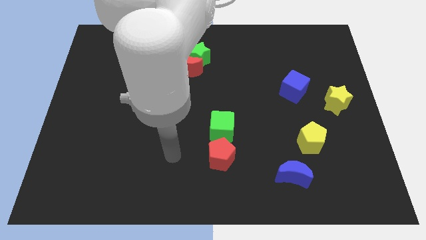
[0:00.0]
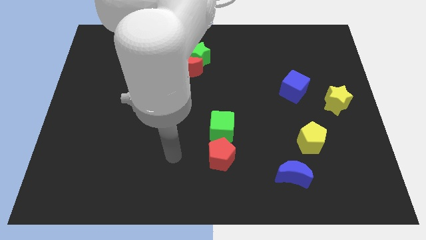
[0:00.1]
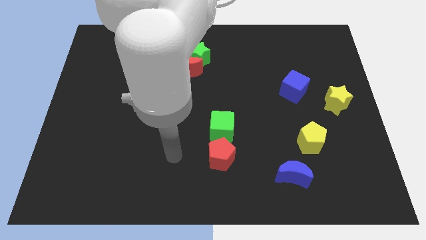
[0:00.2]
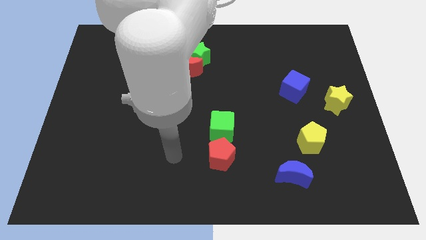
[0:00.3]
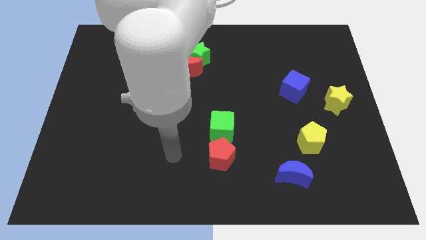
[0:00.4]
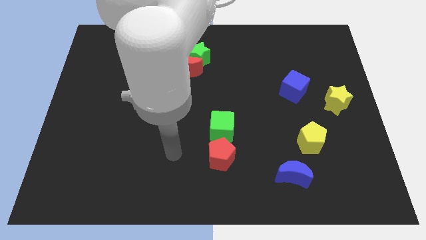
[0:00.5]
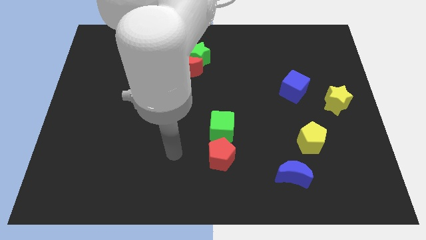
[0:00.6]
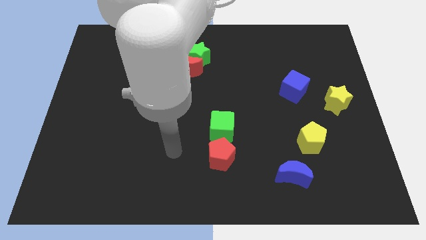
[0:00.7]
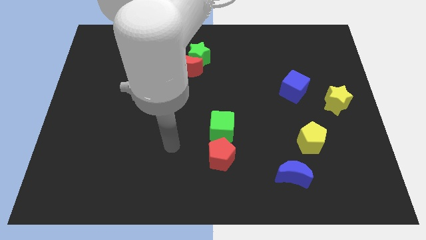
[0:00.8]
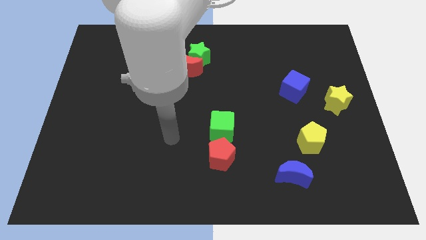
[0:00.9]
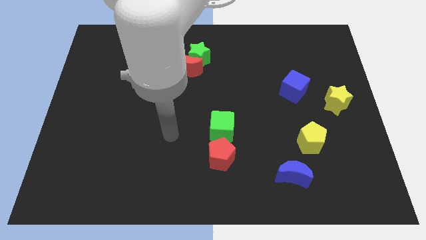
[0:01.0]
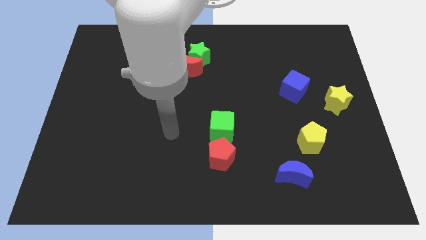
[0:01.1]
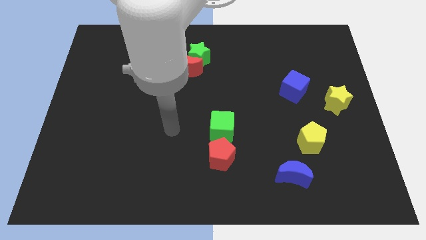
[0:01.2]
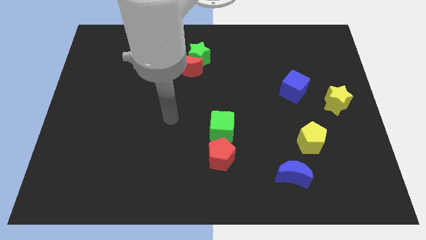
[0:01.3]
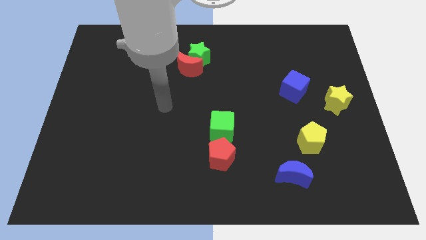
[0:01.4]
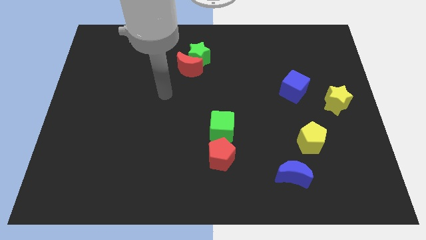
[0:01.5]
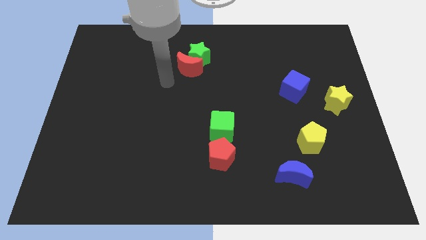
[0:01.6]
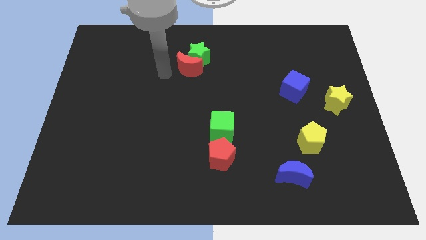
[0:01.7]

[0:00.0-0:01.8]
move your hand towards the top side

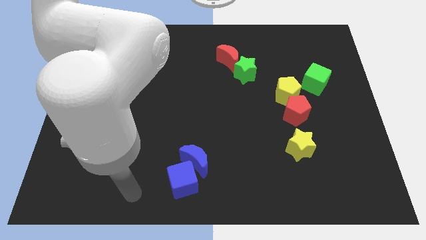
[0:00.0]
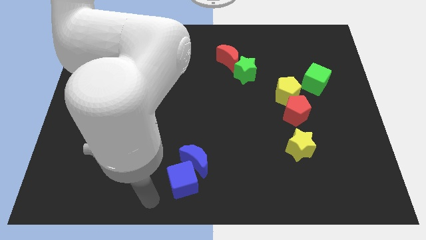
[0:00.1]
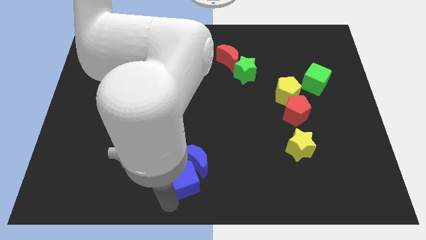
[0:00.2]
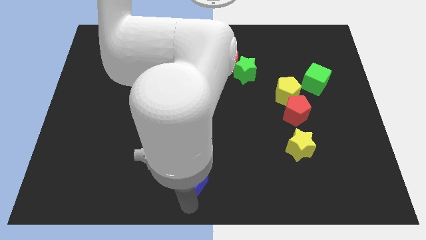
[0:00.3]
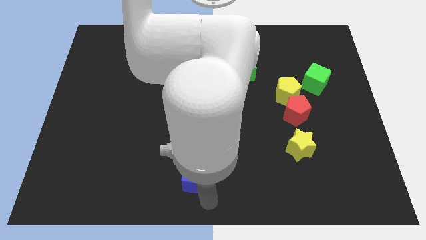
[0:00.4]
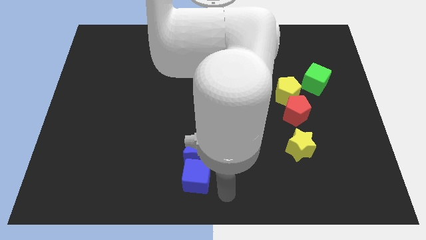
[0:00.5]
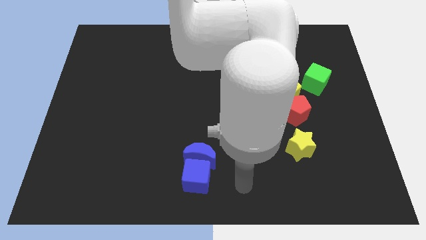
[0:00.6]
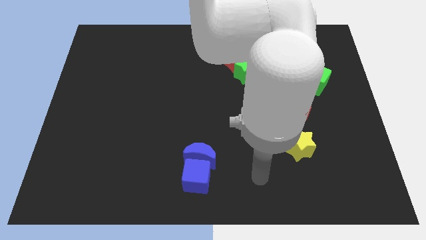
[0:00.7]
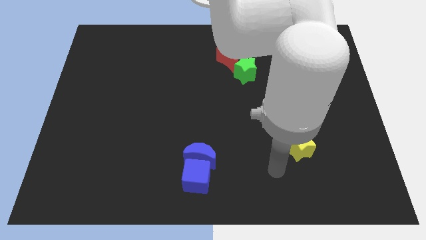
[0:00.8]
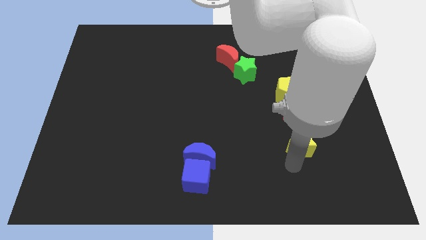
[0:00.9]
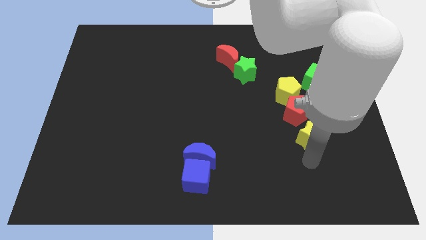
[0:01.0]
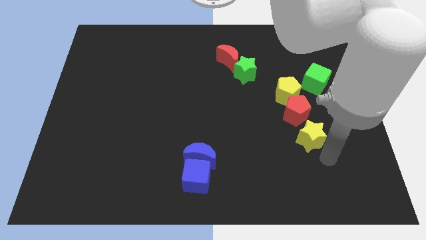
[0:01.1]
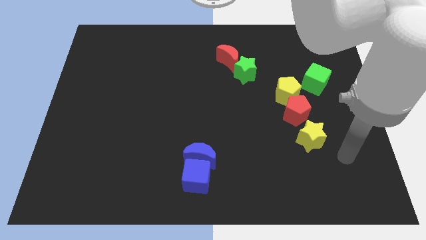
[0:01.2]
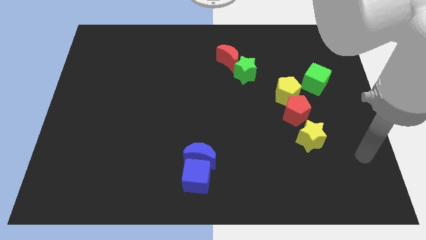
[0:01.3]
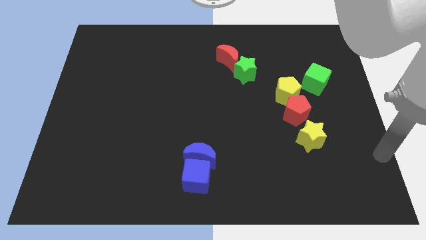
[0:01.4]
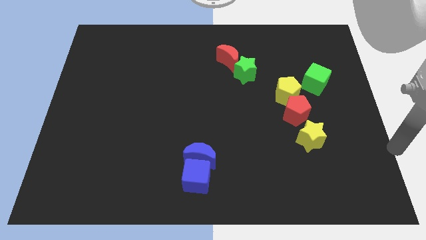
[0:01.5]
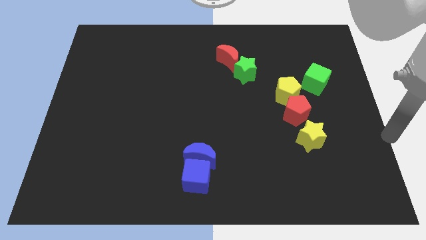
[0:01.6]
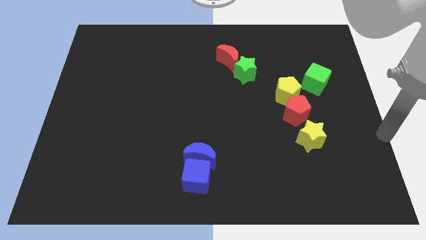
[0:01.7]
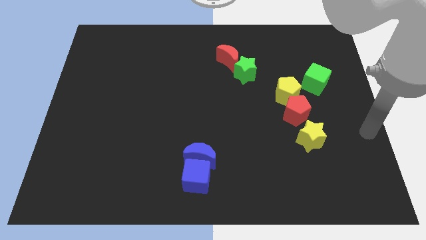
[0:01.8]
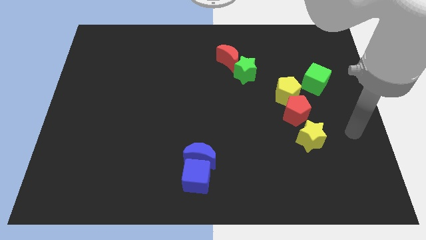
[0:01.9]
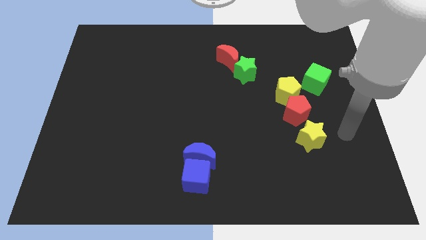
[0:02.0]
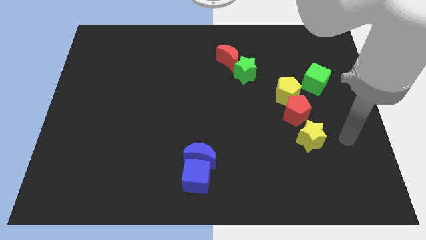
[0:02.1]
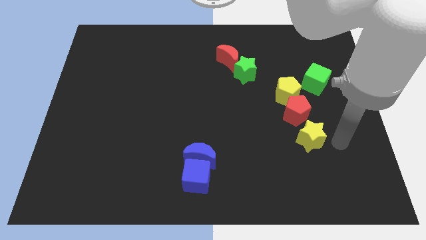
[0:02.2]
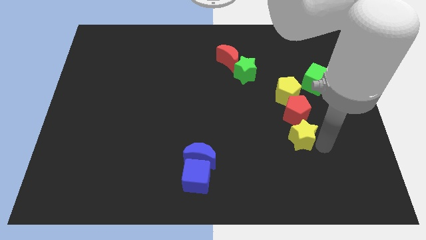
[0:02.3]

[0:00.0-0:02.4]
move your arm towards the right side of the yellow star

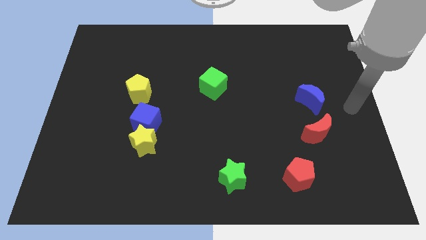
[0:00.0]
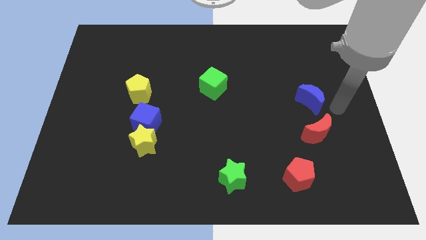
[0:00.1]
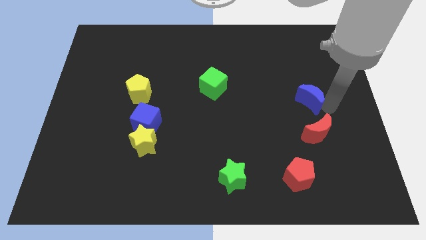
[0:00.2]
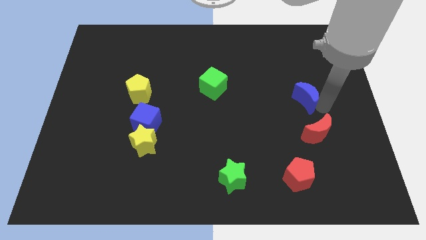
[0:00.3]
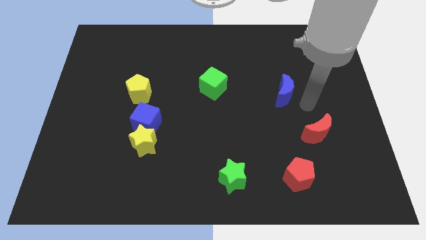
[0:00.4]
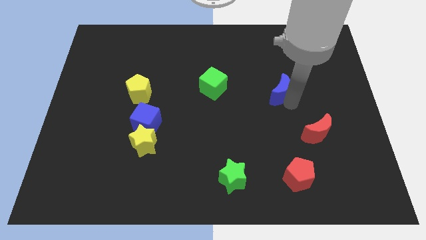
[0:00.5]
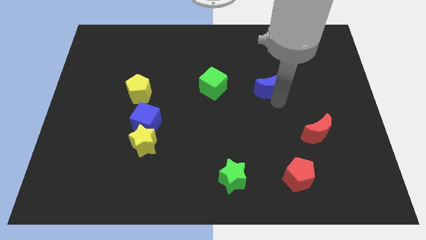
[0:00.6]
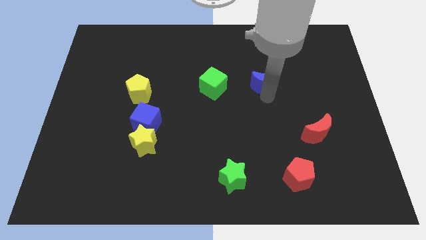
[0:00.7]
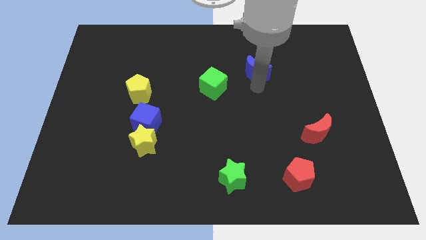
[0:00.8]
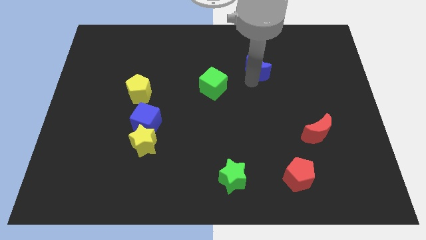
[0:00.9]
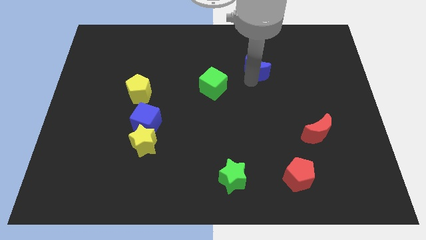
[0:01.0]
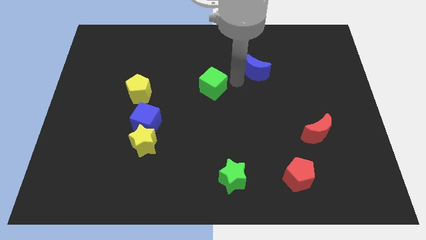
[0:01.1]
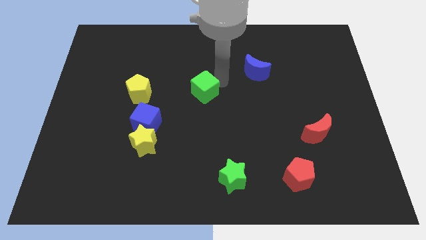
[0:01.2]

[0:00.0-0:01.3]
move the blue crescent towards the top center of the board

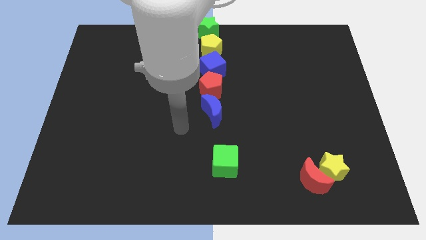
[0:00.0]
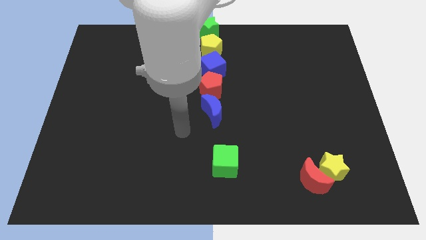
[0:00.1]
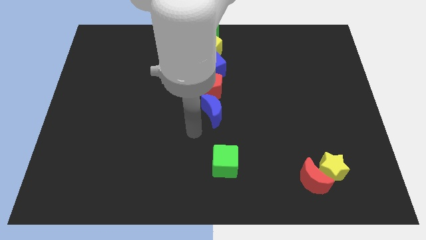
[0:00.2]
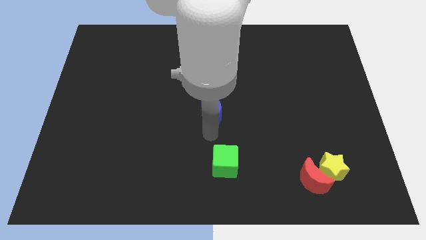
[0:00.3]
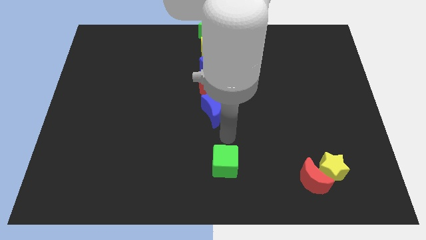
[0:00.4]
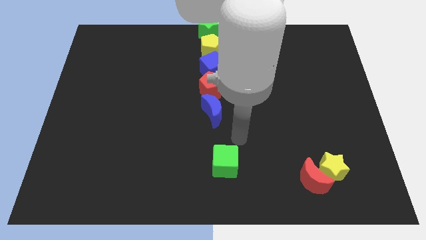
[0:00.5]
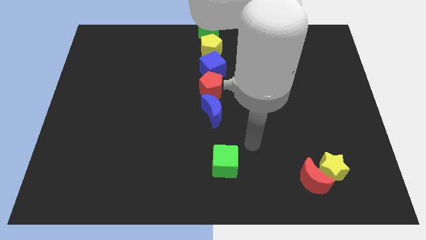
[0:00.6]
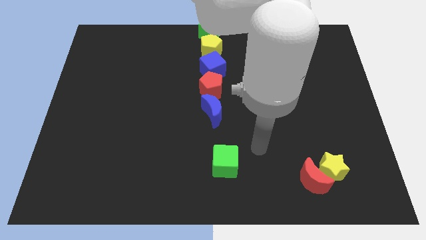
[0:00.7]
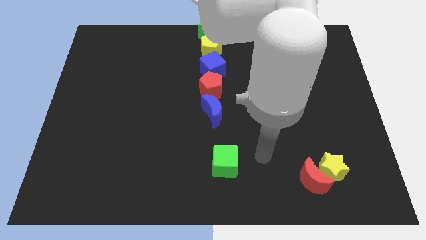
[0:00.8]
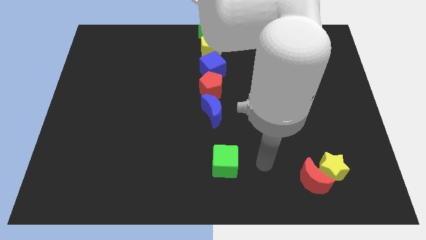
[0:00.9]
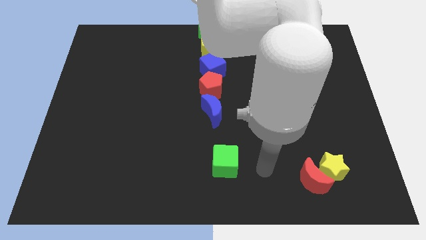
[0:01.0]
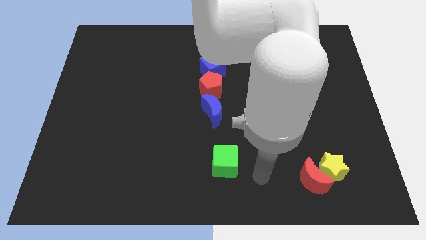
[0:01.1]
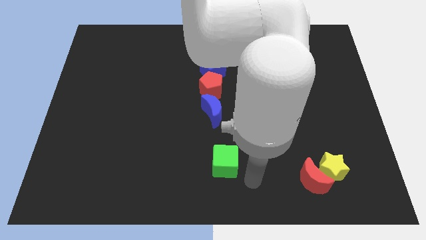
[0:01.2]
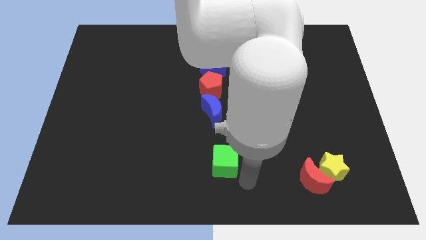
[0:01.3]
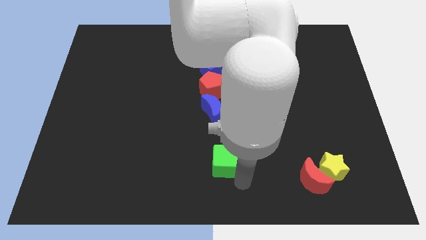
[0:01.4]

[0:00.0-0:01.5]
place your hand close to green cube

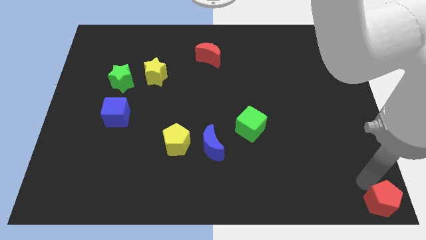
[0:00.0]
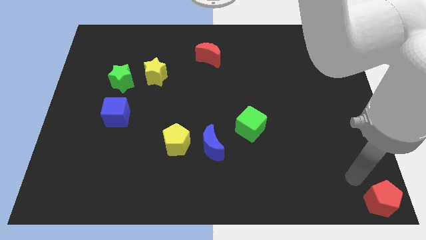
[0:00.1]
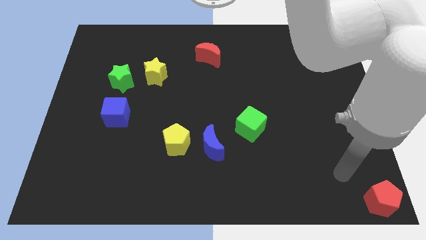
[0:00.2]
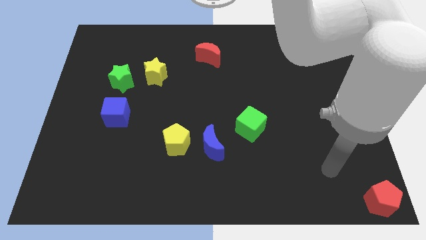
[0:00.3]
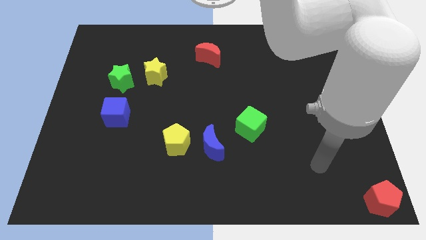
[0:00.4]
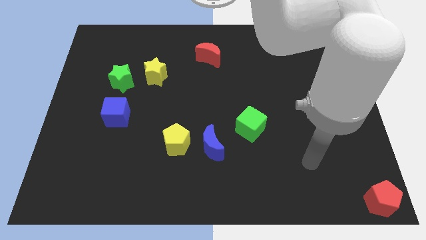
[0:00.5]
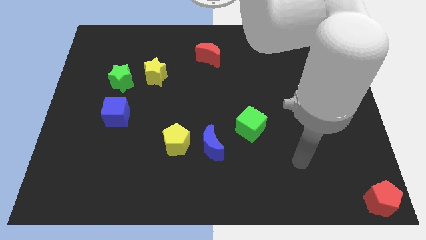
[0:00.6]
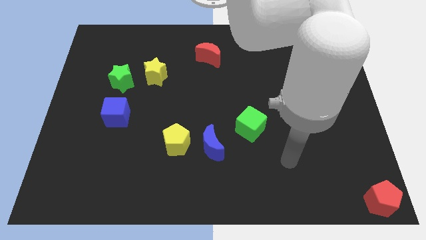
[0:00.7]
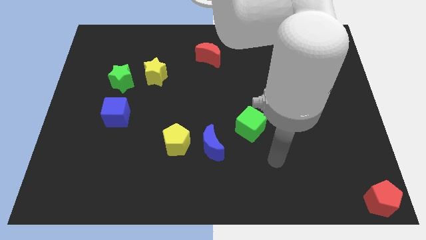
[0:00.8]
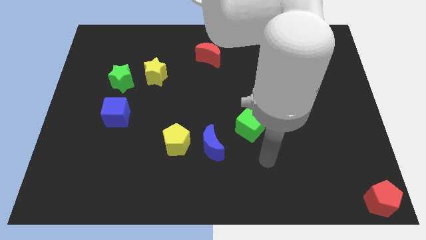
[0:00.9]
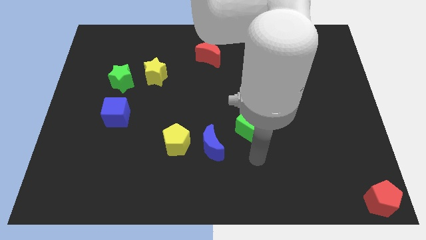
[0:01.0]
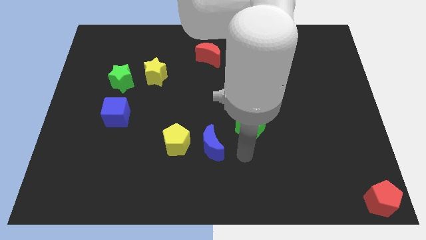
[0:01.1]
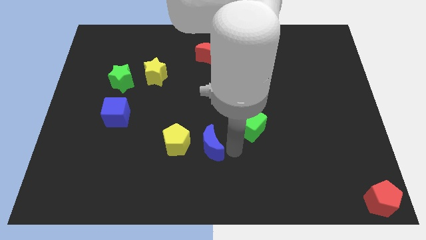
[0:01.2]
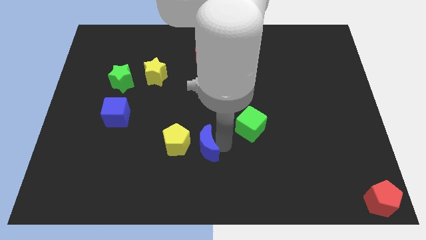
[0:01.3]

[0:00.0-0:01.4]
move the arm towards the right of the blue crescent

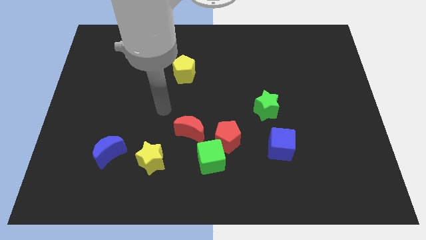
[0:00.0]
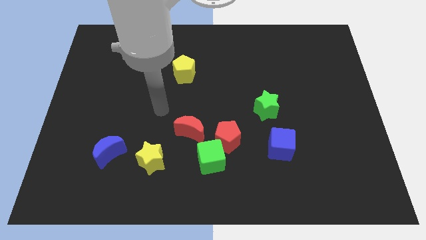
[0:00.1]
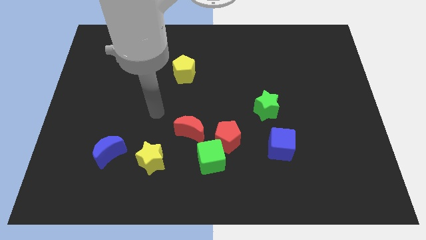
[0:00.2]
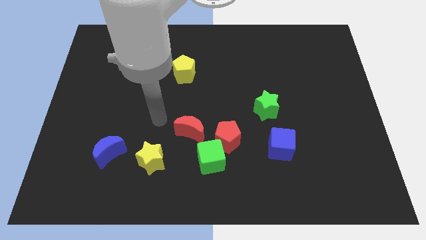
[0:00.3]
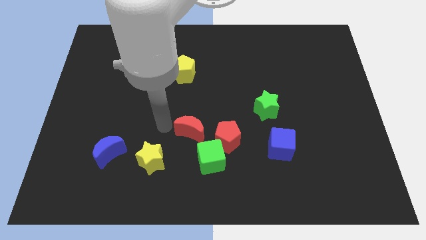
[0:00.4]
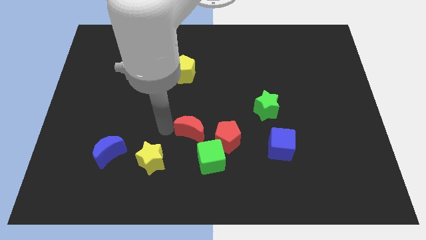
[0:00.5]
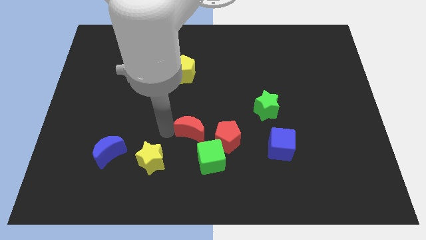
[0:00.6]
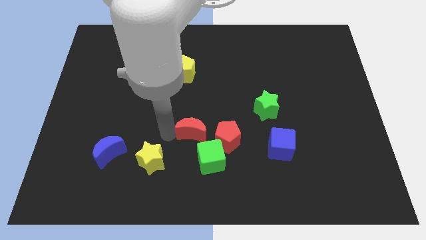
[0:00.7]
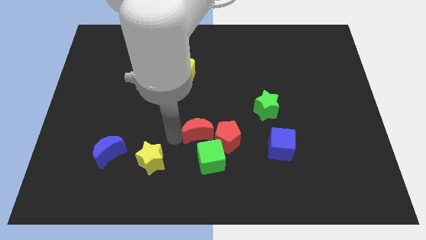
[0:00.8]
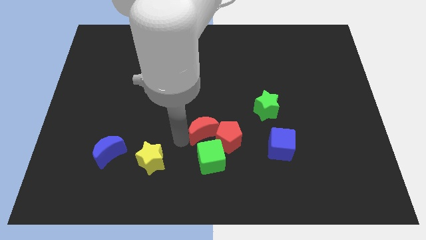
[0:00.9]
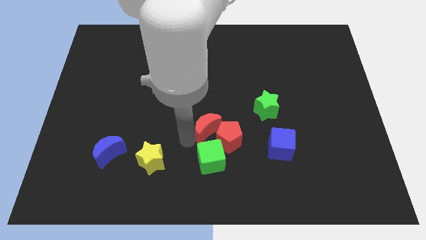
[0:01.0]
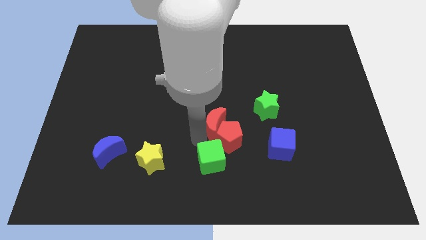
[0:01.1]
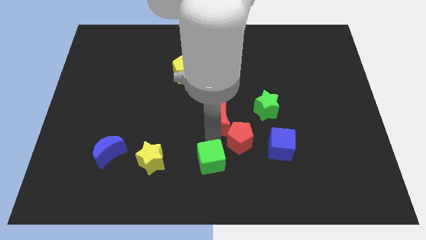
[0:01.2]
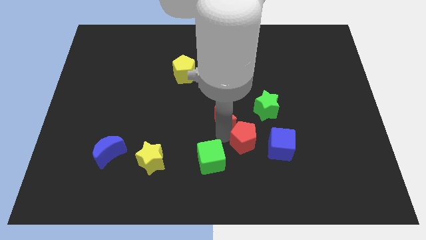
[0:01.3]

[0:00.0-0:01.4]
push the red crescent into the red pentagon
